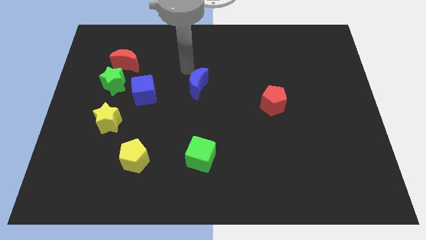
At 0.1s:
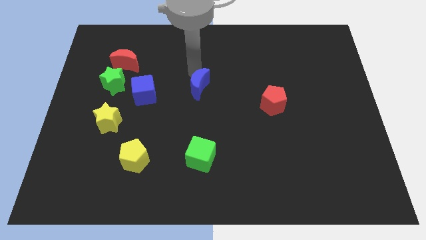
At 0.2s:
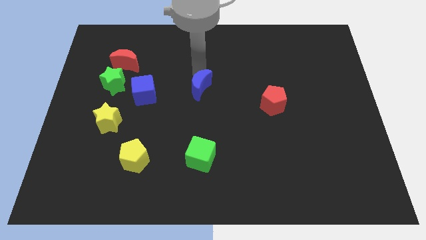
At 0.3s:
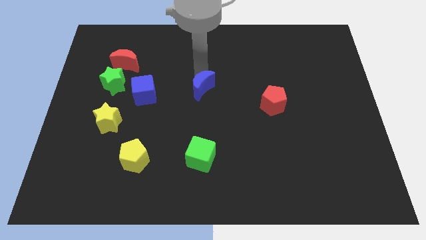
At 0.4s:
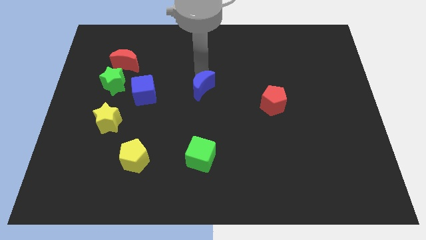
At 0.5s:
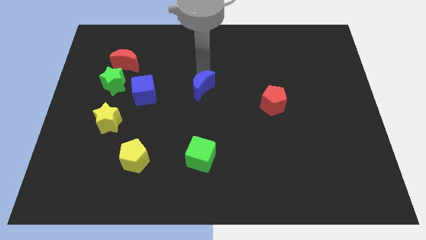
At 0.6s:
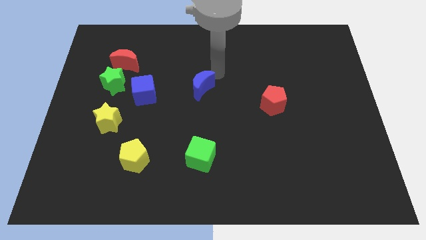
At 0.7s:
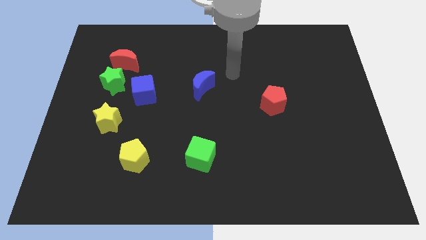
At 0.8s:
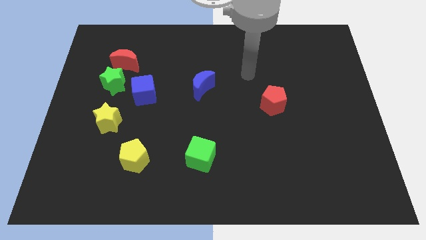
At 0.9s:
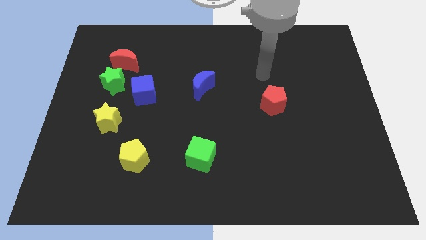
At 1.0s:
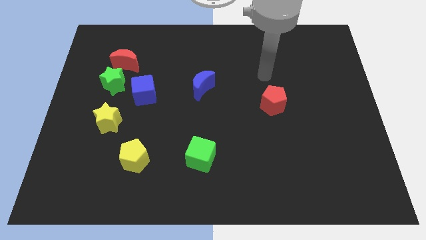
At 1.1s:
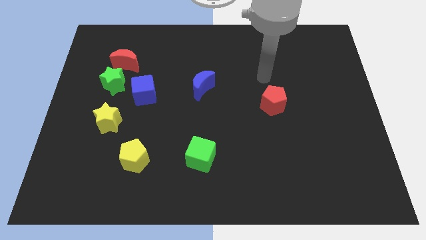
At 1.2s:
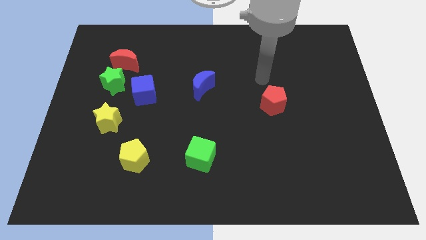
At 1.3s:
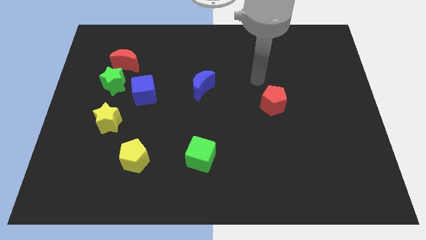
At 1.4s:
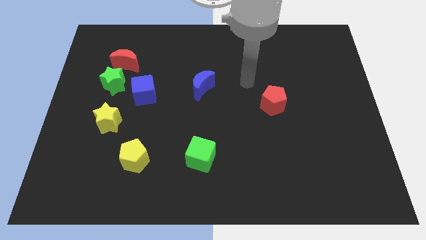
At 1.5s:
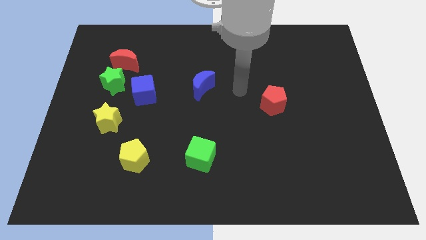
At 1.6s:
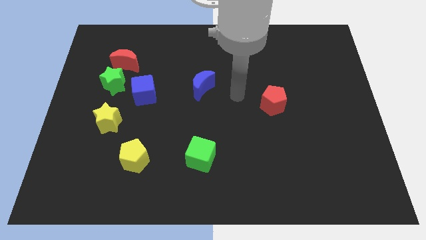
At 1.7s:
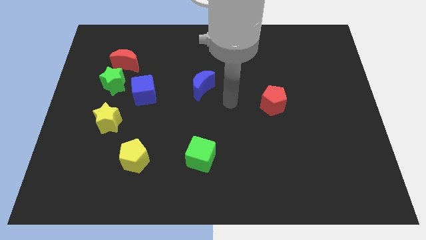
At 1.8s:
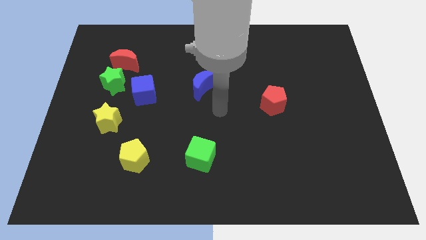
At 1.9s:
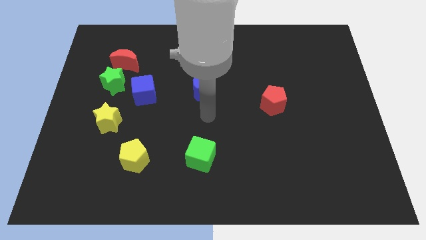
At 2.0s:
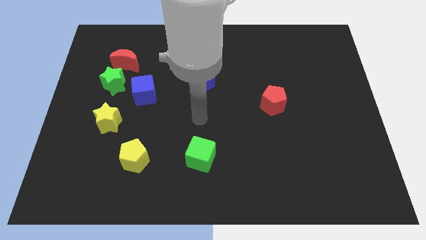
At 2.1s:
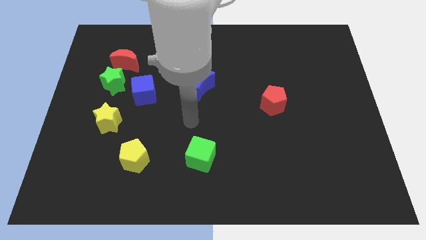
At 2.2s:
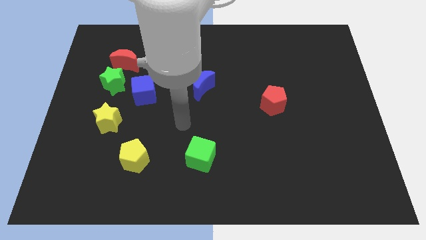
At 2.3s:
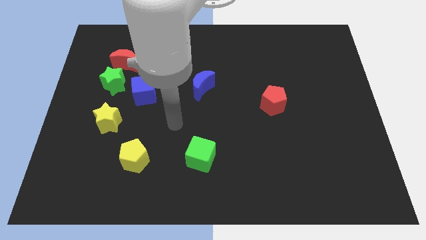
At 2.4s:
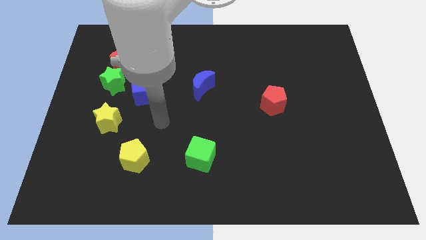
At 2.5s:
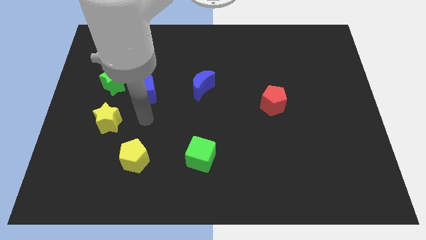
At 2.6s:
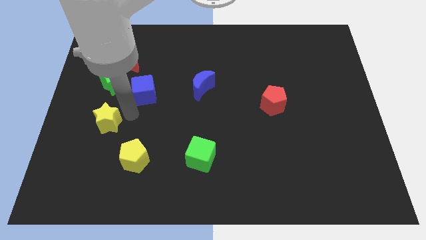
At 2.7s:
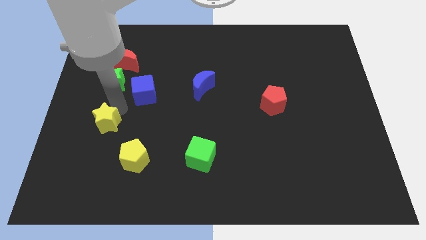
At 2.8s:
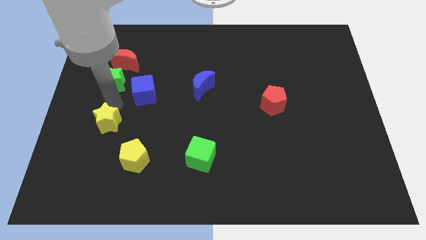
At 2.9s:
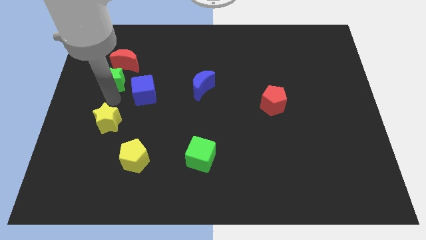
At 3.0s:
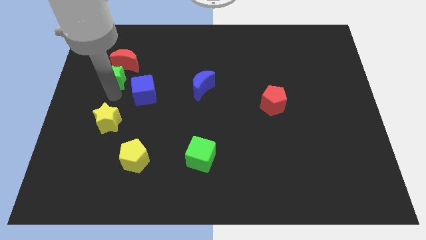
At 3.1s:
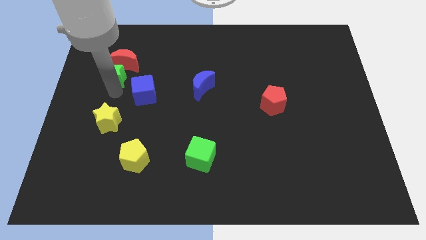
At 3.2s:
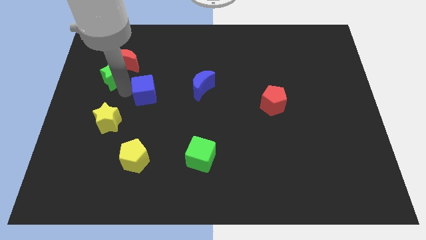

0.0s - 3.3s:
place the green star into the red crescent

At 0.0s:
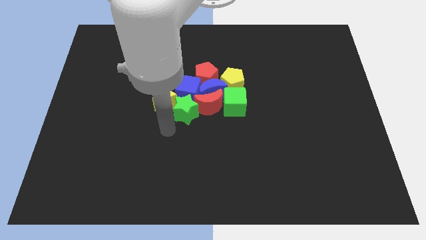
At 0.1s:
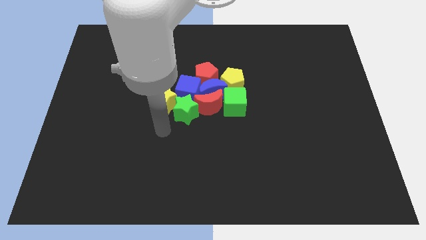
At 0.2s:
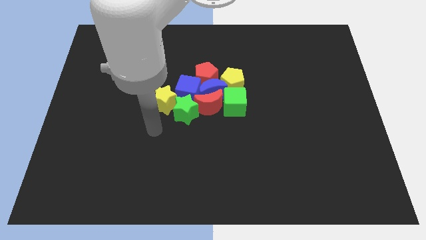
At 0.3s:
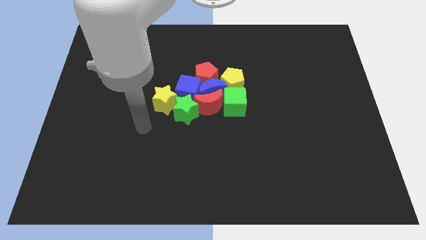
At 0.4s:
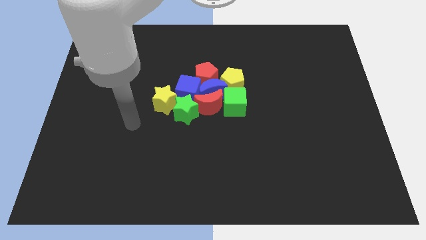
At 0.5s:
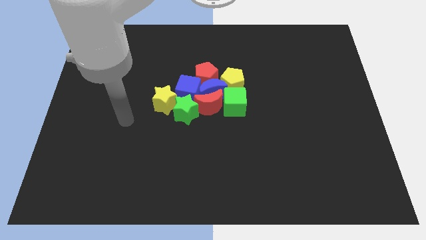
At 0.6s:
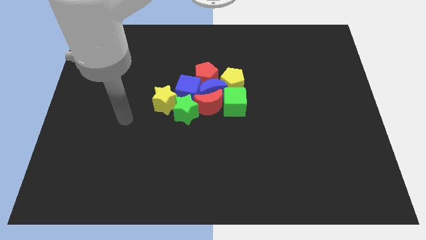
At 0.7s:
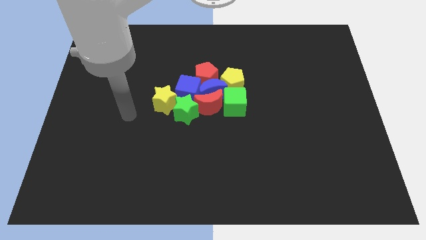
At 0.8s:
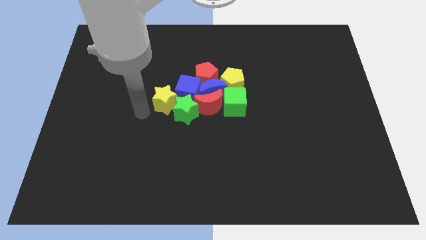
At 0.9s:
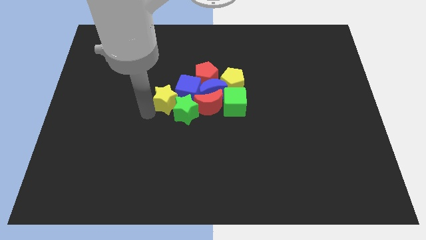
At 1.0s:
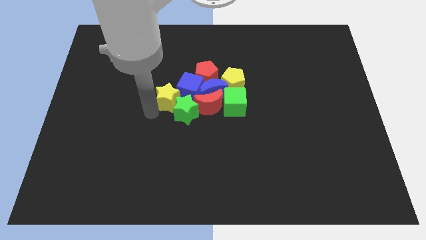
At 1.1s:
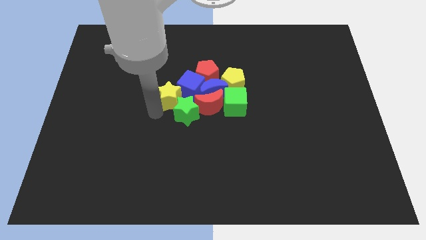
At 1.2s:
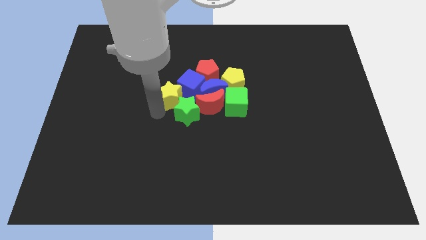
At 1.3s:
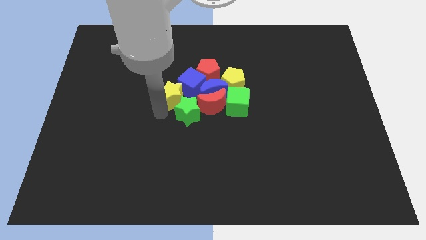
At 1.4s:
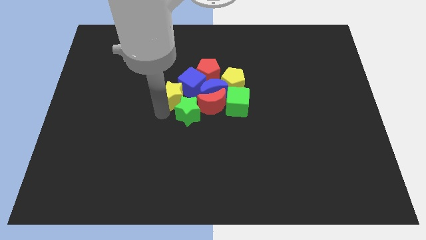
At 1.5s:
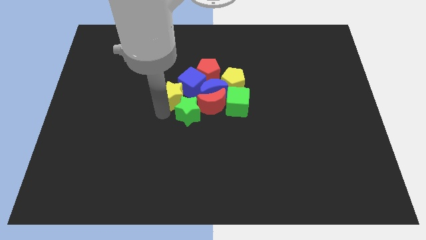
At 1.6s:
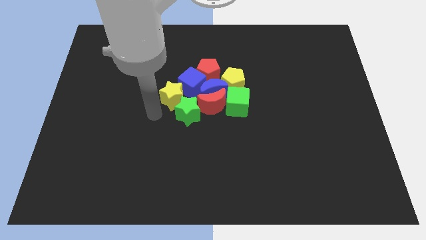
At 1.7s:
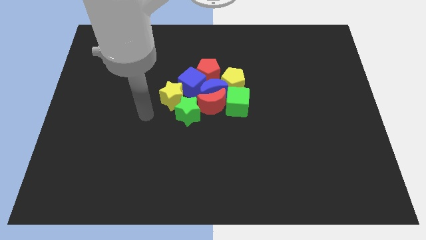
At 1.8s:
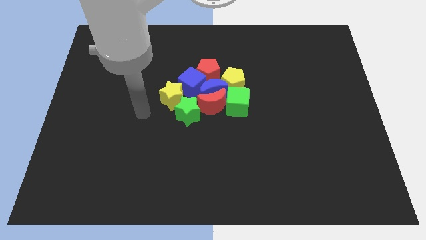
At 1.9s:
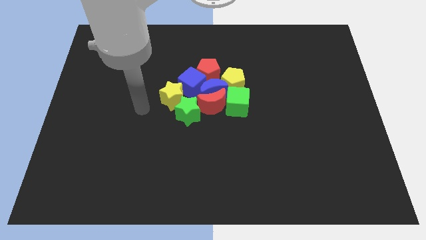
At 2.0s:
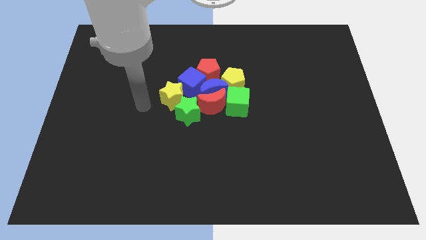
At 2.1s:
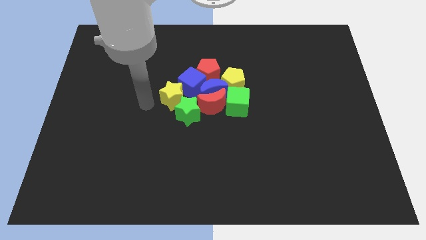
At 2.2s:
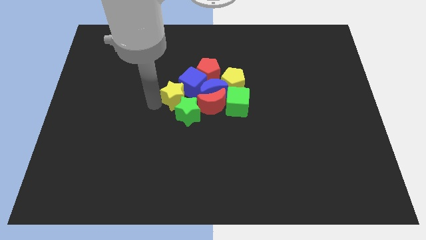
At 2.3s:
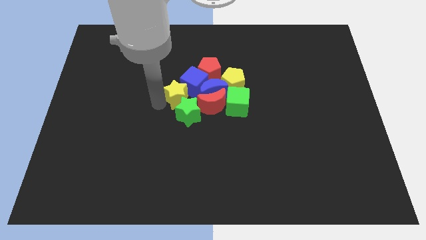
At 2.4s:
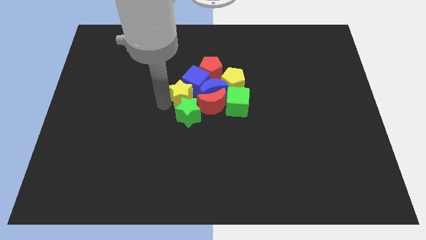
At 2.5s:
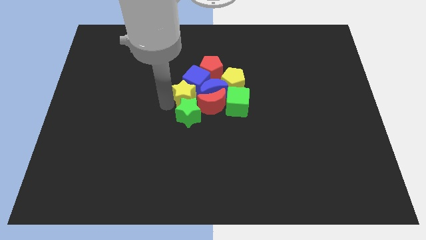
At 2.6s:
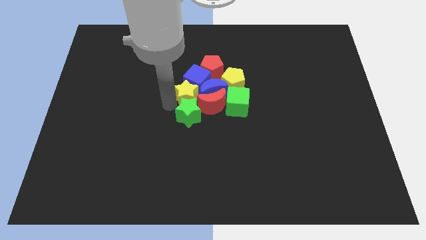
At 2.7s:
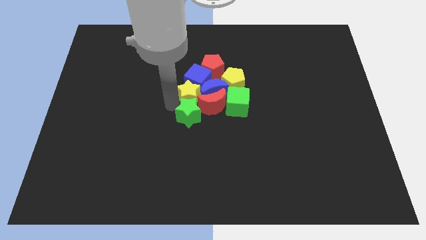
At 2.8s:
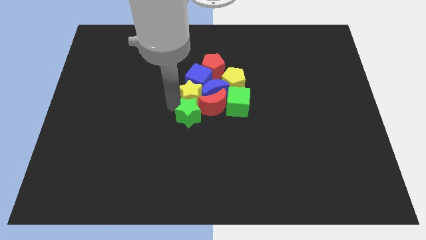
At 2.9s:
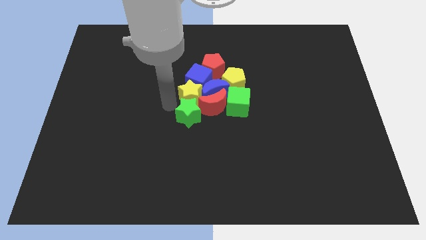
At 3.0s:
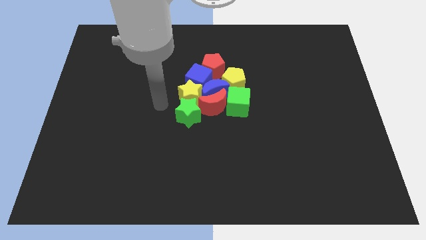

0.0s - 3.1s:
push the yellow star into the blue cube

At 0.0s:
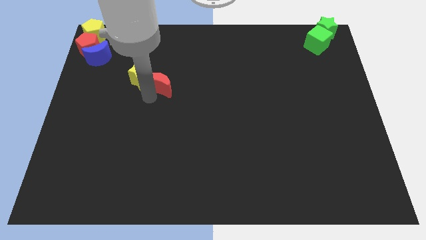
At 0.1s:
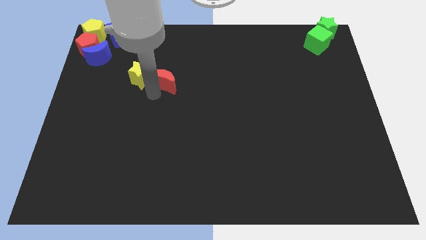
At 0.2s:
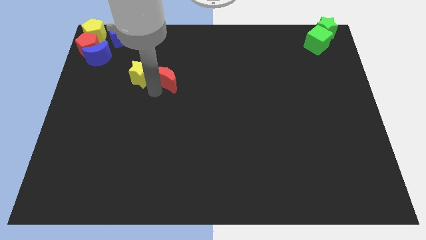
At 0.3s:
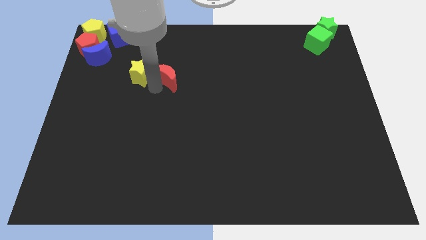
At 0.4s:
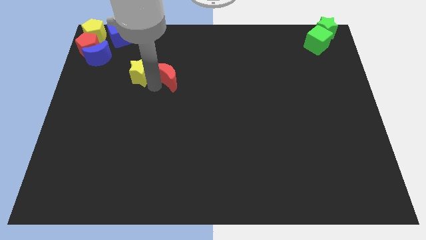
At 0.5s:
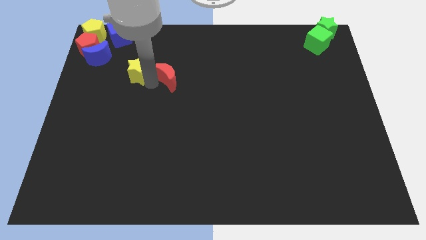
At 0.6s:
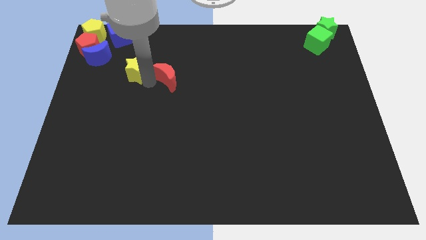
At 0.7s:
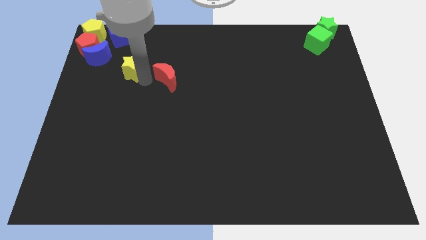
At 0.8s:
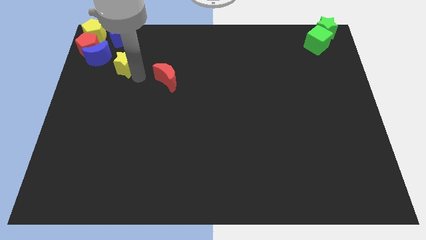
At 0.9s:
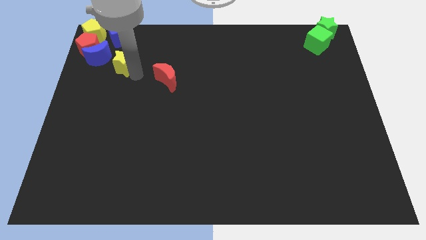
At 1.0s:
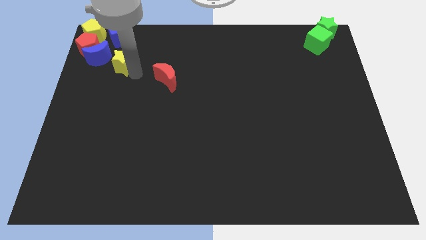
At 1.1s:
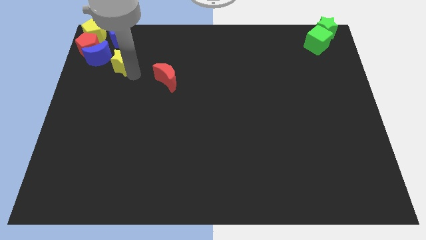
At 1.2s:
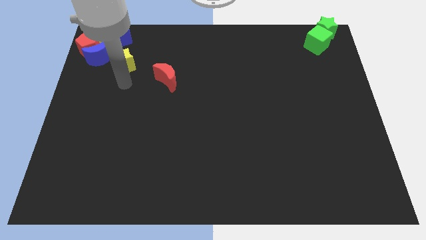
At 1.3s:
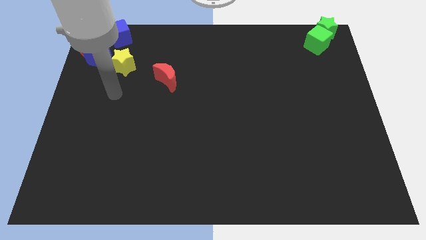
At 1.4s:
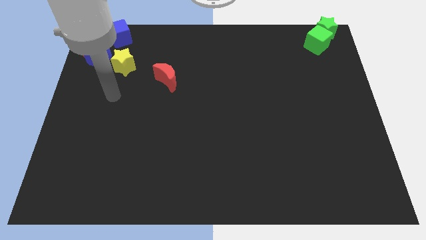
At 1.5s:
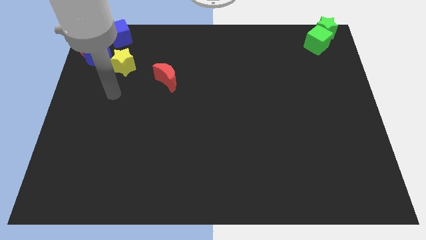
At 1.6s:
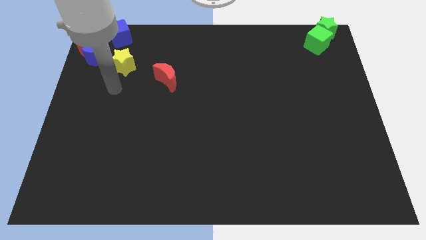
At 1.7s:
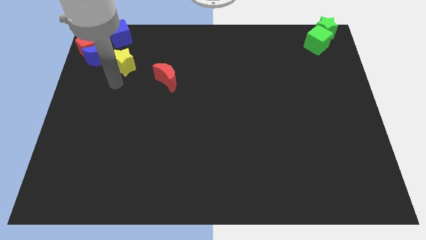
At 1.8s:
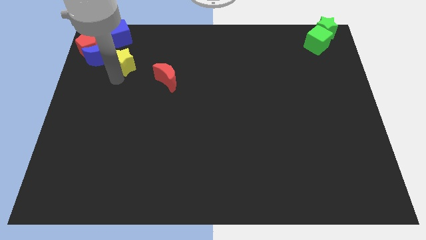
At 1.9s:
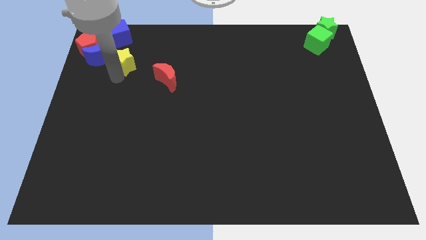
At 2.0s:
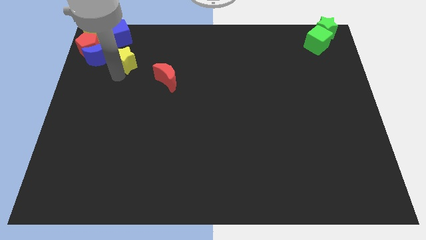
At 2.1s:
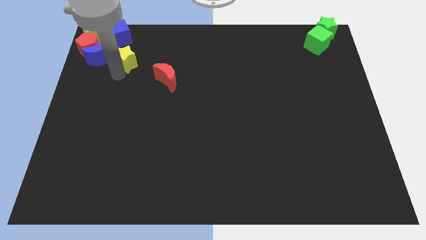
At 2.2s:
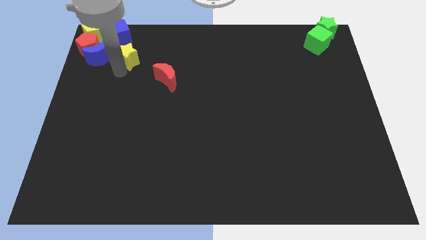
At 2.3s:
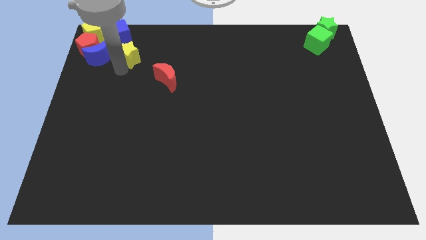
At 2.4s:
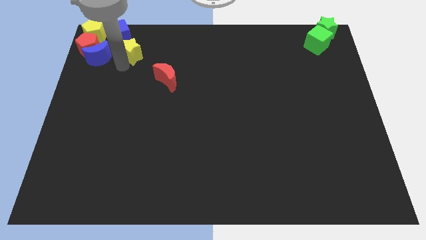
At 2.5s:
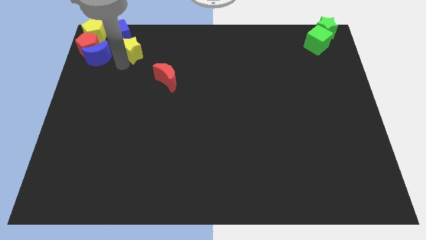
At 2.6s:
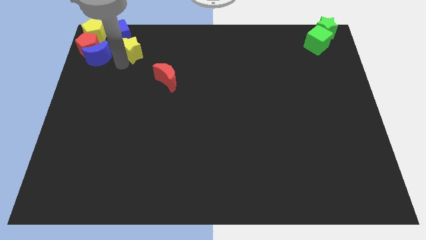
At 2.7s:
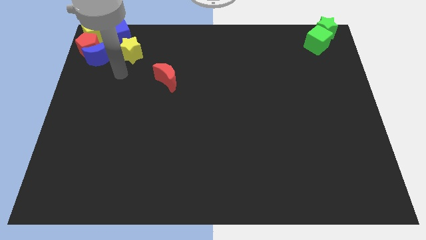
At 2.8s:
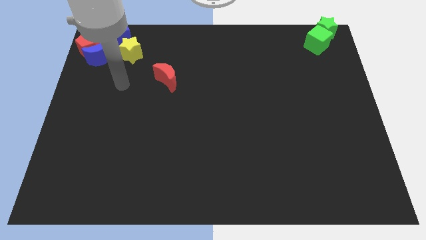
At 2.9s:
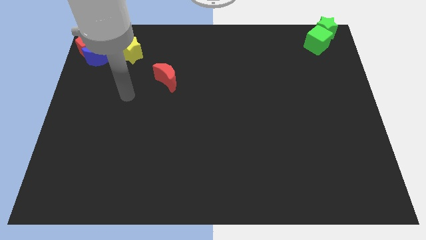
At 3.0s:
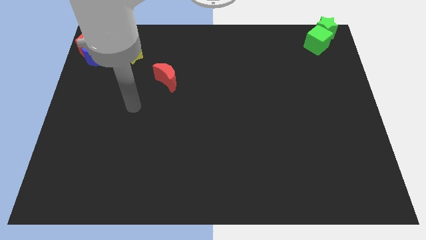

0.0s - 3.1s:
move the yellow star to the right side of the group of blocks
